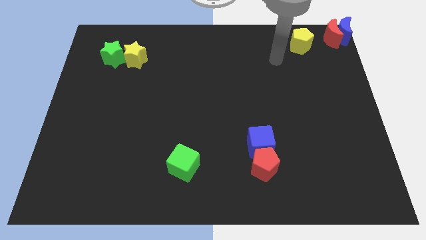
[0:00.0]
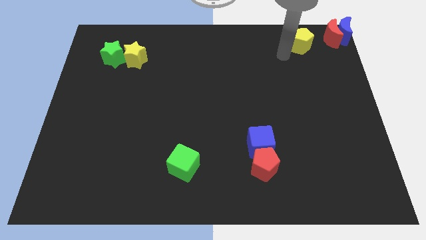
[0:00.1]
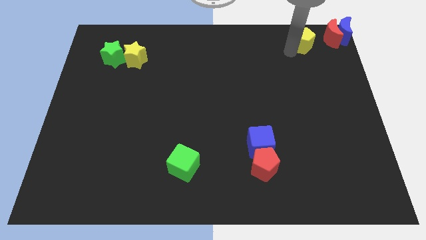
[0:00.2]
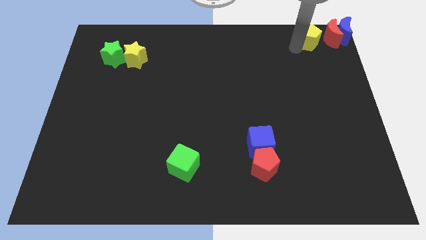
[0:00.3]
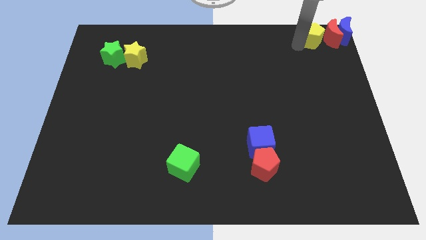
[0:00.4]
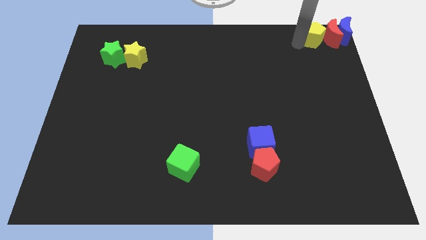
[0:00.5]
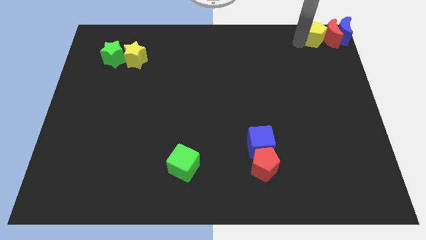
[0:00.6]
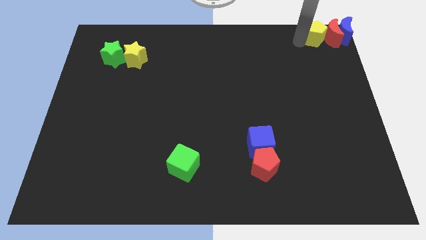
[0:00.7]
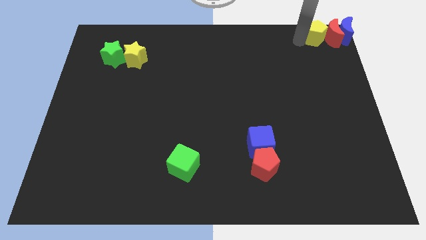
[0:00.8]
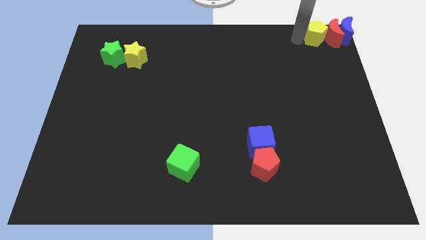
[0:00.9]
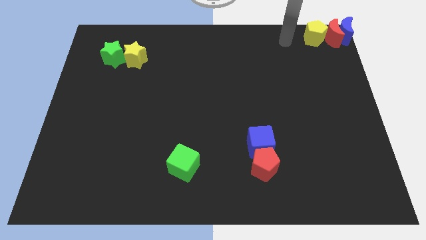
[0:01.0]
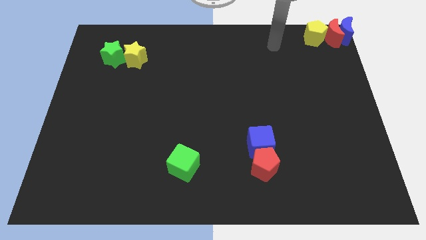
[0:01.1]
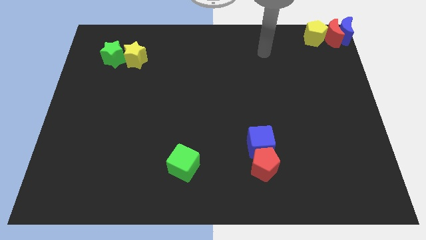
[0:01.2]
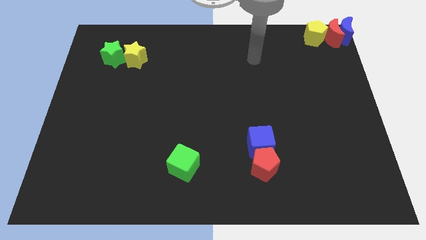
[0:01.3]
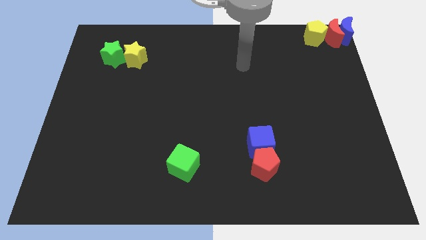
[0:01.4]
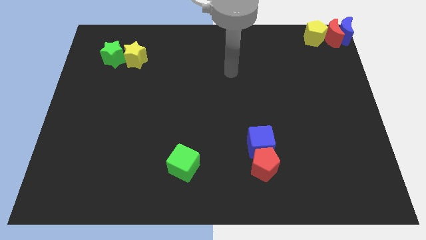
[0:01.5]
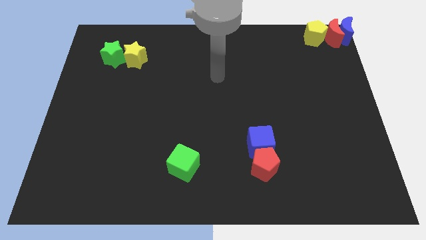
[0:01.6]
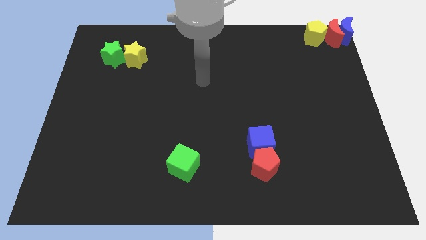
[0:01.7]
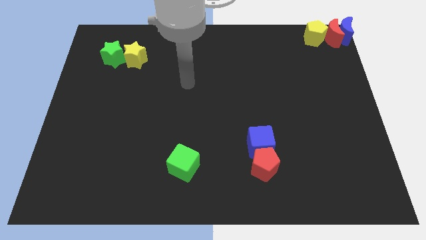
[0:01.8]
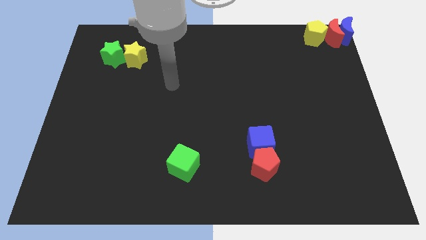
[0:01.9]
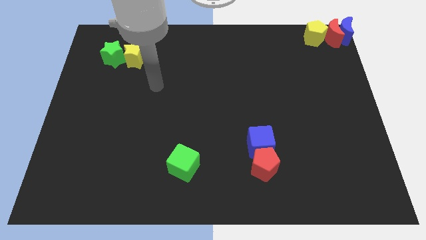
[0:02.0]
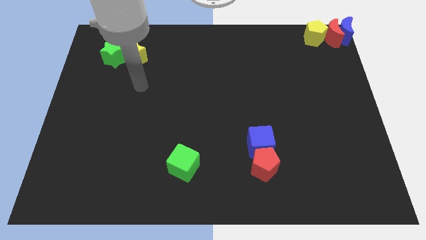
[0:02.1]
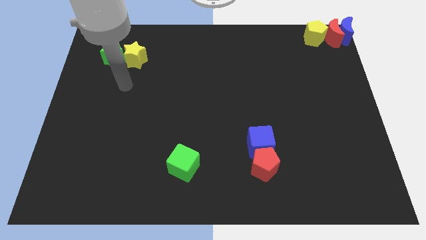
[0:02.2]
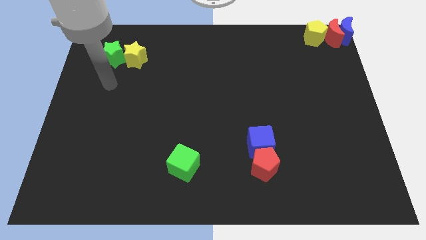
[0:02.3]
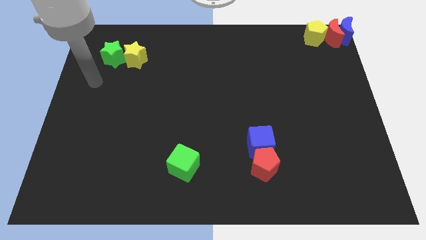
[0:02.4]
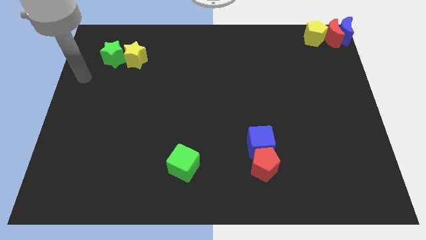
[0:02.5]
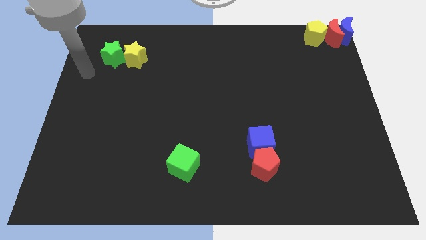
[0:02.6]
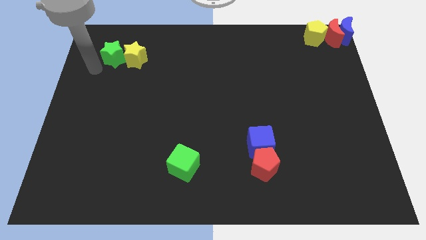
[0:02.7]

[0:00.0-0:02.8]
put the yellow pentagon to the left of the red crescent

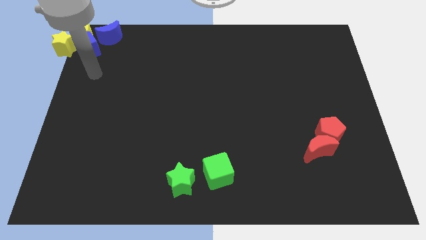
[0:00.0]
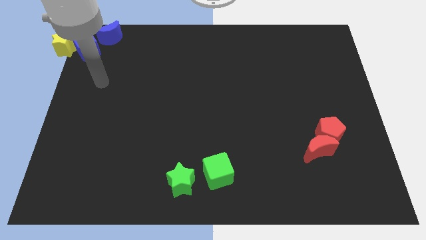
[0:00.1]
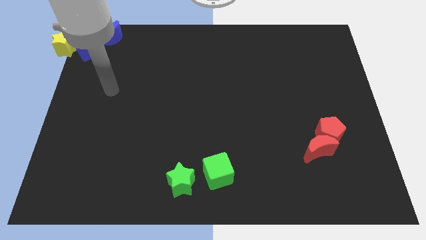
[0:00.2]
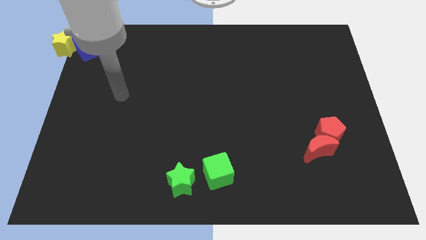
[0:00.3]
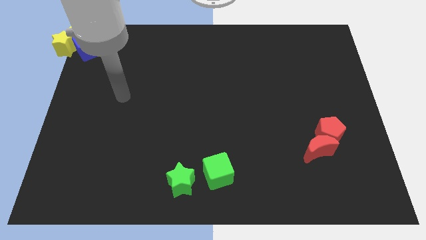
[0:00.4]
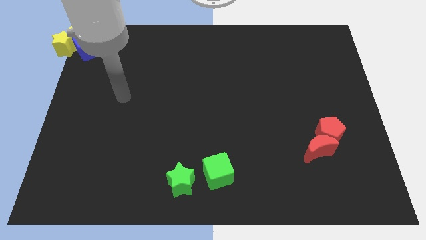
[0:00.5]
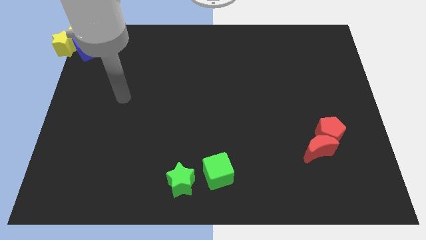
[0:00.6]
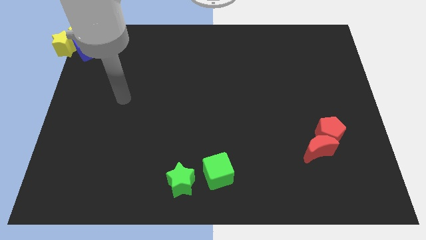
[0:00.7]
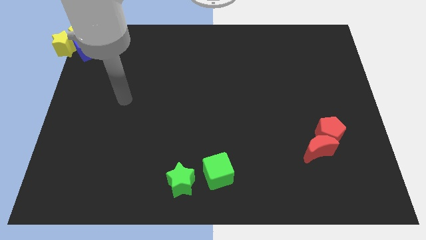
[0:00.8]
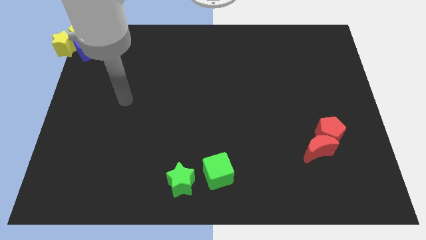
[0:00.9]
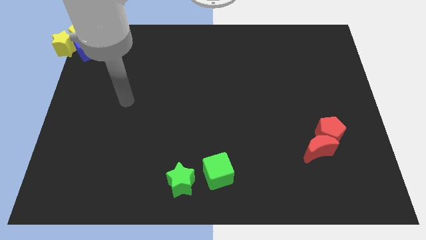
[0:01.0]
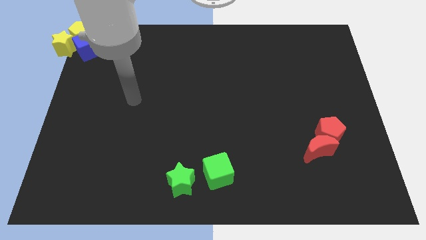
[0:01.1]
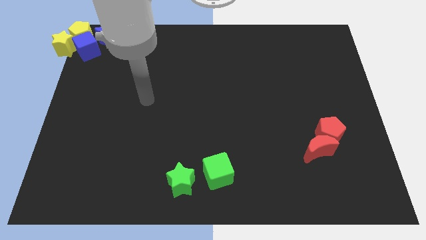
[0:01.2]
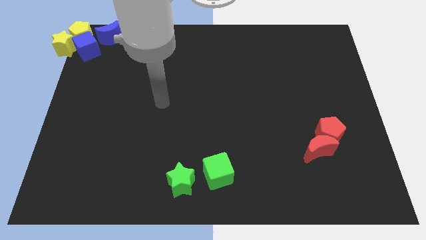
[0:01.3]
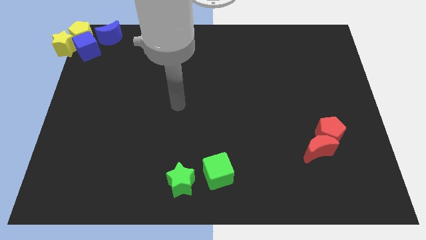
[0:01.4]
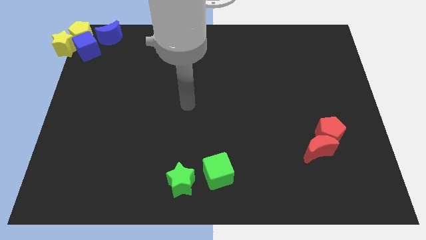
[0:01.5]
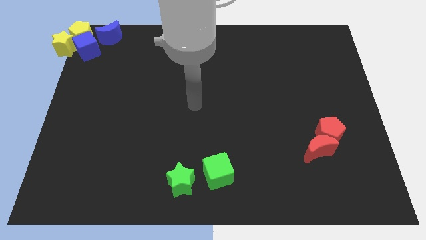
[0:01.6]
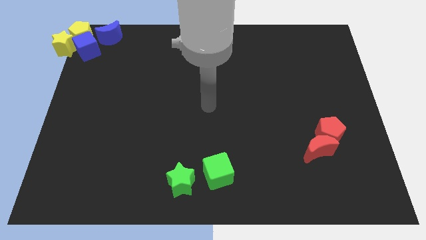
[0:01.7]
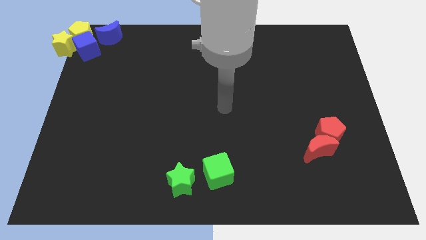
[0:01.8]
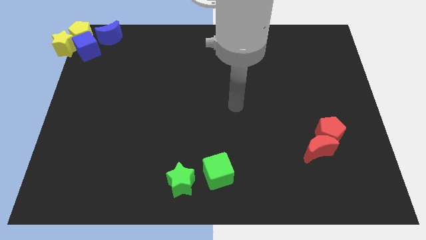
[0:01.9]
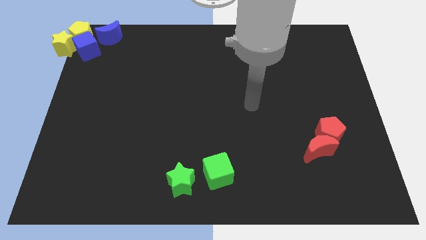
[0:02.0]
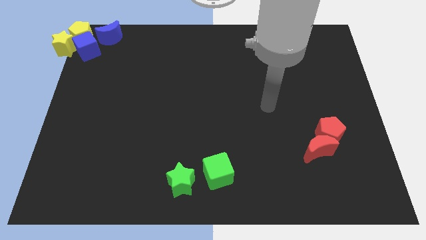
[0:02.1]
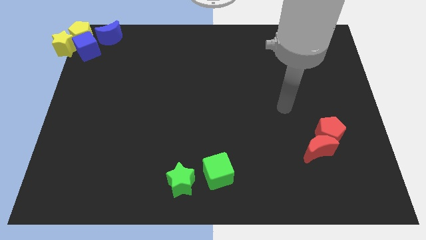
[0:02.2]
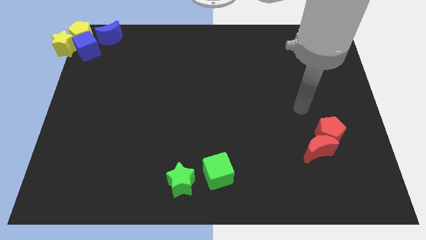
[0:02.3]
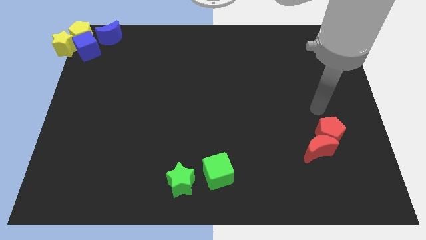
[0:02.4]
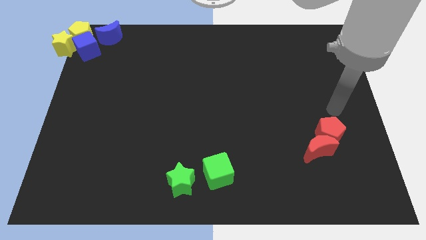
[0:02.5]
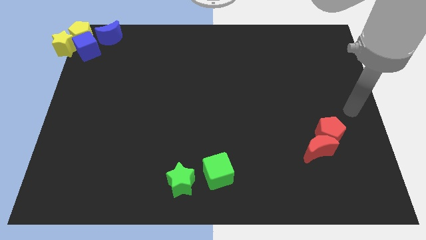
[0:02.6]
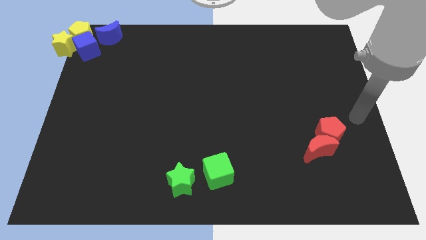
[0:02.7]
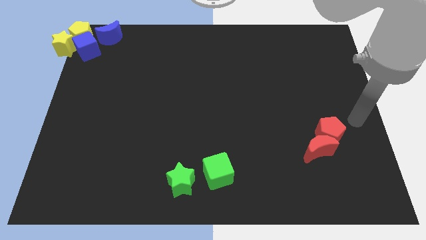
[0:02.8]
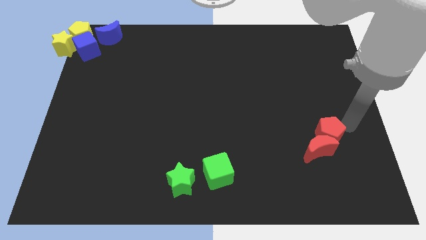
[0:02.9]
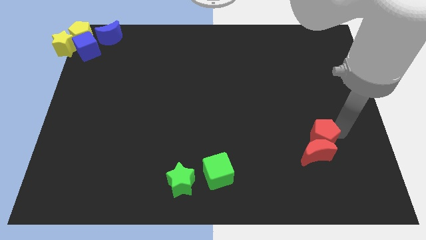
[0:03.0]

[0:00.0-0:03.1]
move arm near red blocks

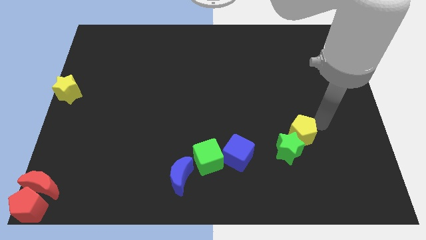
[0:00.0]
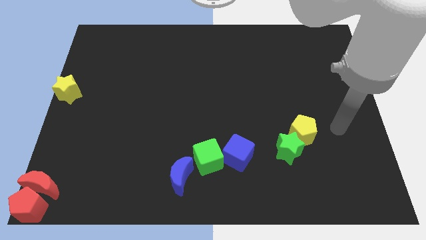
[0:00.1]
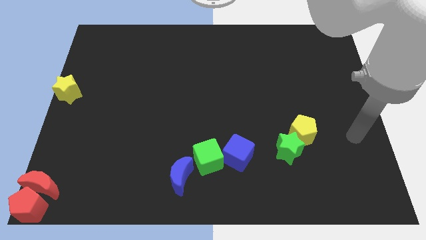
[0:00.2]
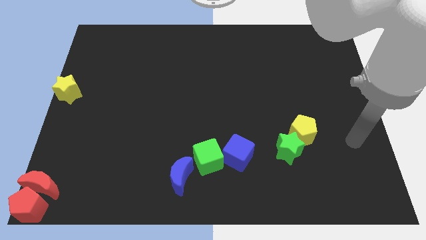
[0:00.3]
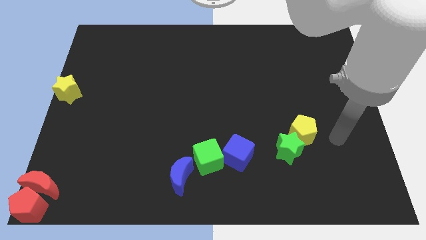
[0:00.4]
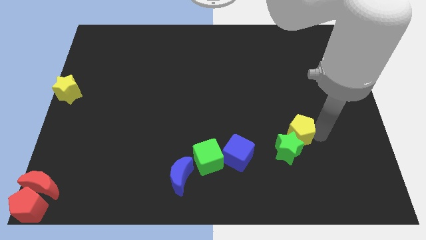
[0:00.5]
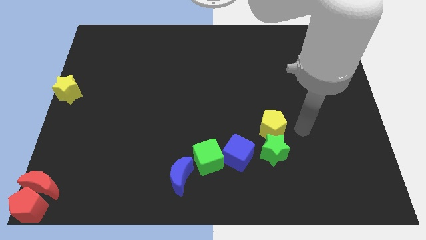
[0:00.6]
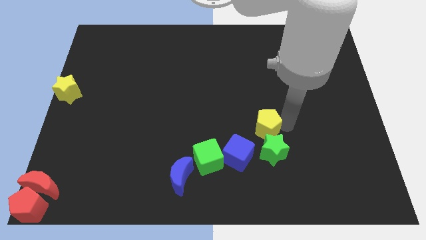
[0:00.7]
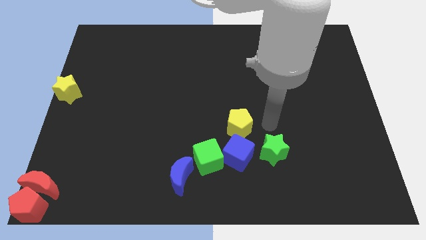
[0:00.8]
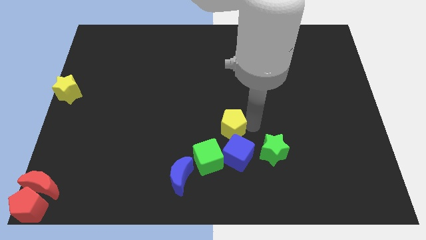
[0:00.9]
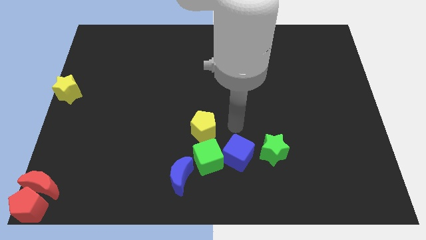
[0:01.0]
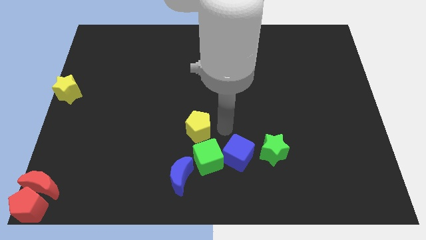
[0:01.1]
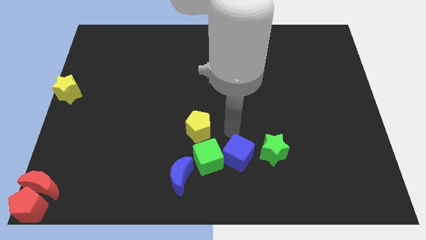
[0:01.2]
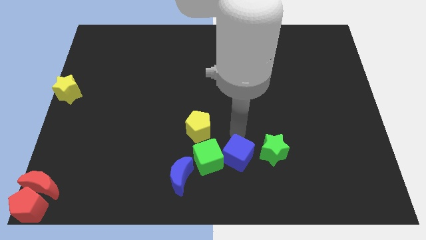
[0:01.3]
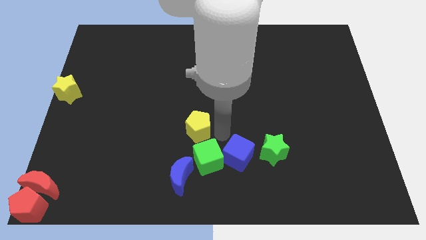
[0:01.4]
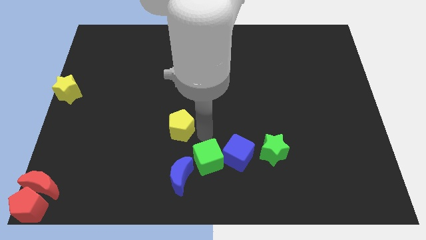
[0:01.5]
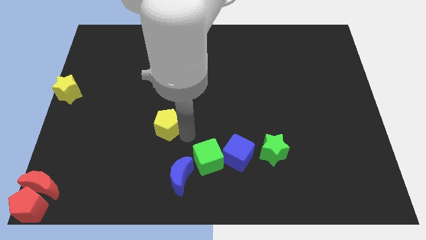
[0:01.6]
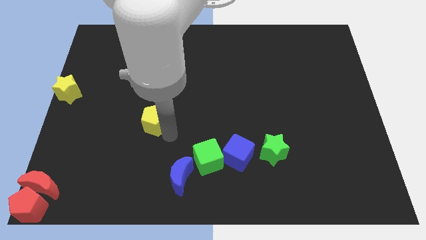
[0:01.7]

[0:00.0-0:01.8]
separate the yellow pentagon from the green star

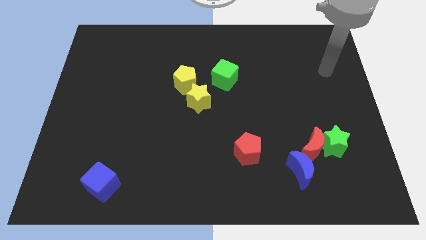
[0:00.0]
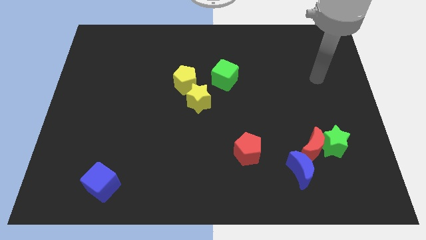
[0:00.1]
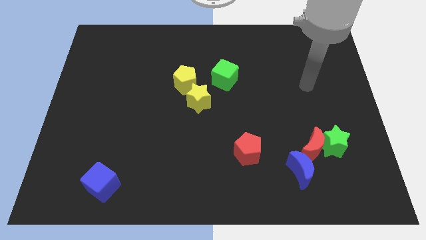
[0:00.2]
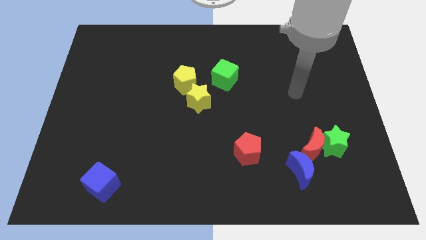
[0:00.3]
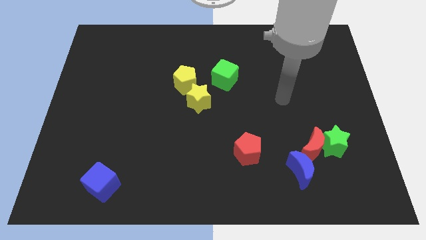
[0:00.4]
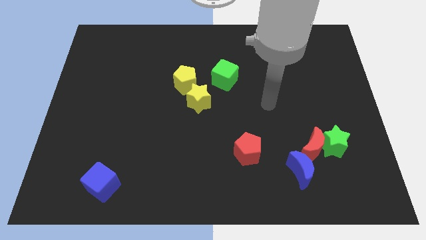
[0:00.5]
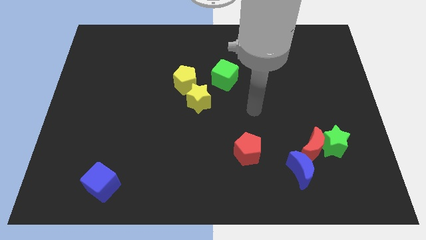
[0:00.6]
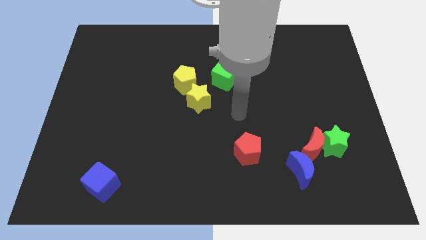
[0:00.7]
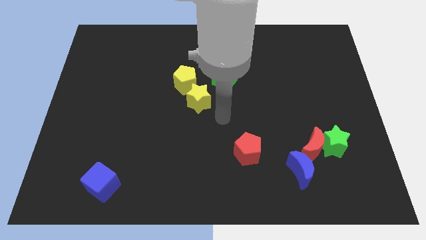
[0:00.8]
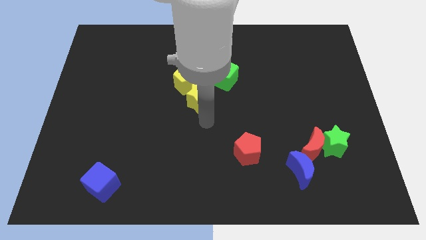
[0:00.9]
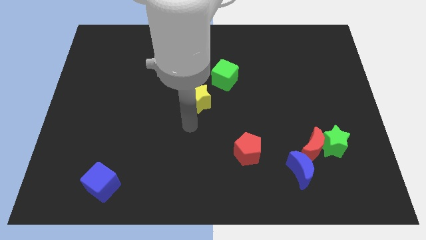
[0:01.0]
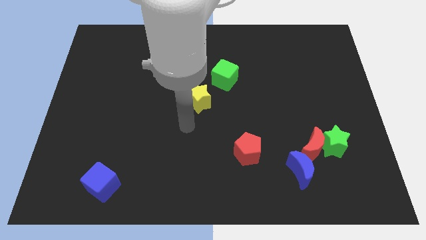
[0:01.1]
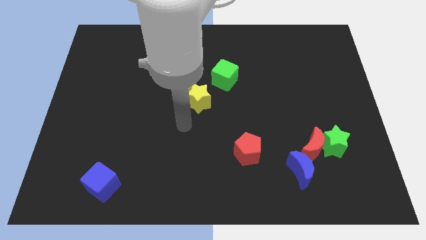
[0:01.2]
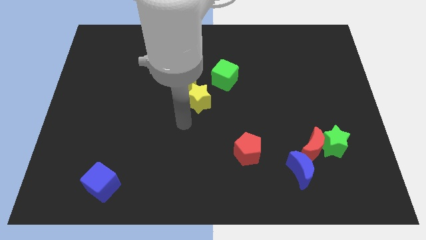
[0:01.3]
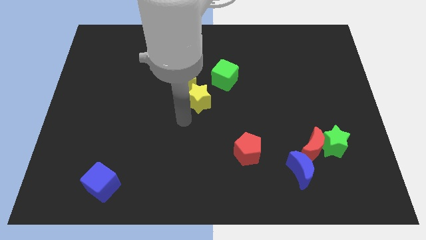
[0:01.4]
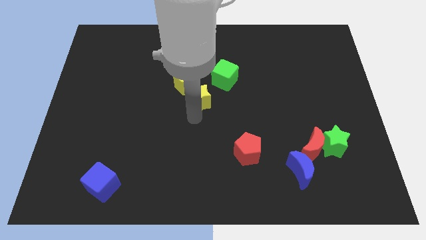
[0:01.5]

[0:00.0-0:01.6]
move your arm to the bottom of the yellow star
